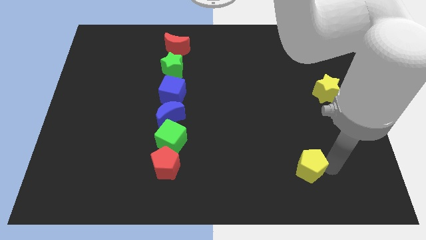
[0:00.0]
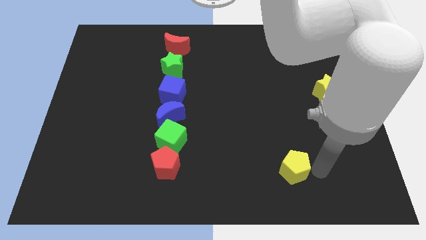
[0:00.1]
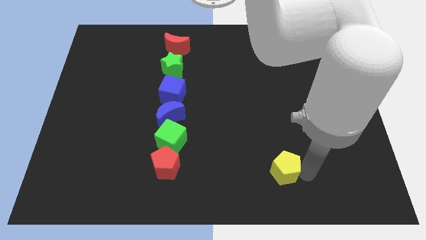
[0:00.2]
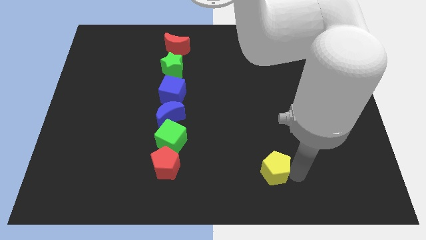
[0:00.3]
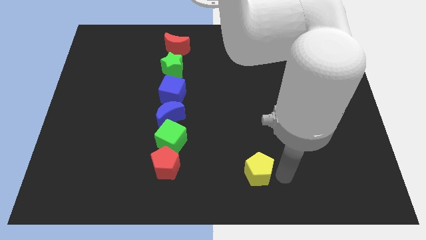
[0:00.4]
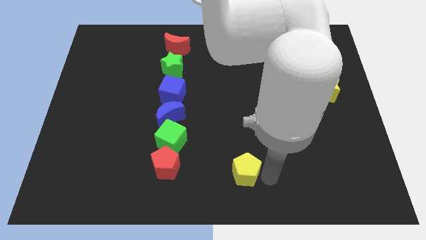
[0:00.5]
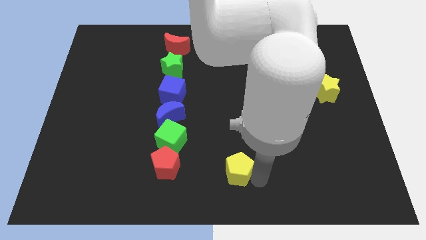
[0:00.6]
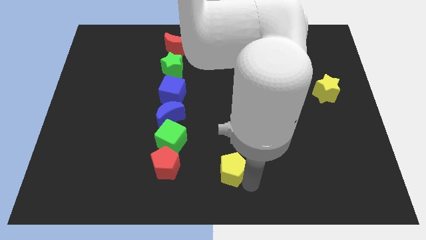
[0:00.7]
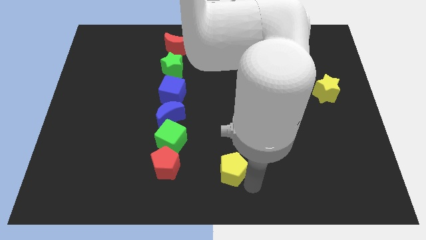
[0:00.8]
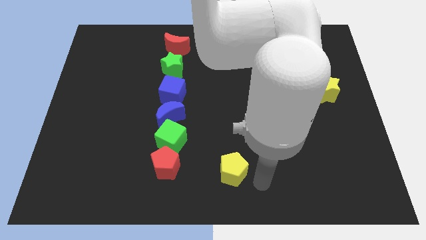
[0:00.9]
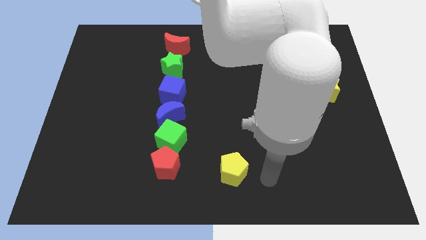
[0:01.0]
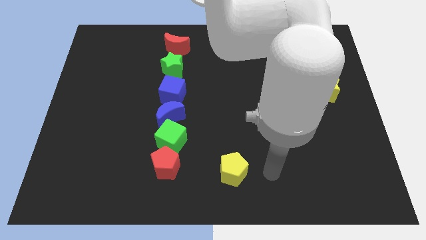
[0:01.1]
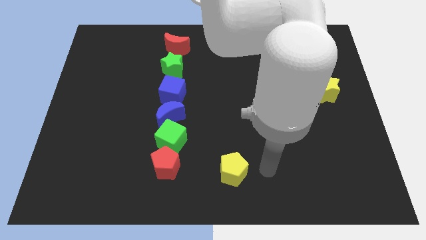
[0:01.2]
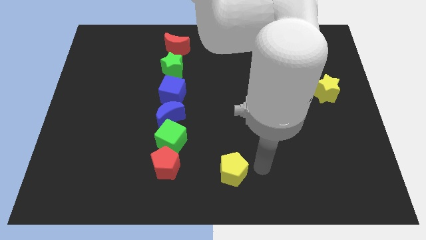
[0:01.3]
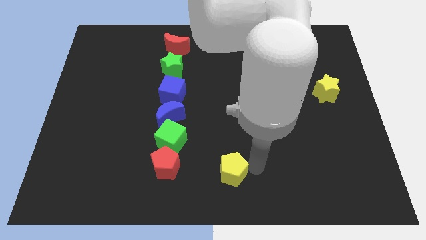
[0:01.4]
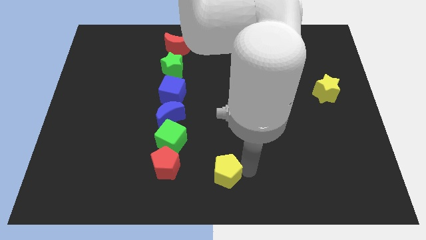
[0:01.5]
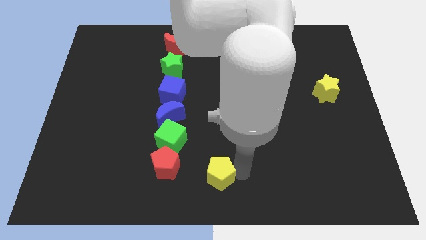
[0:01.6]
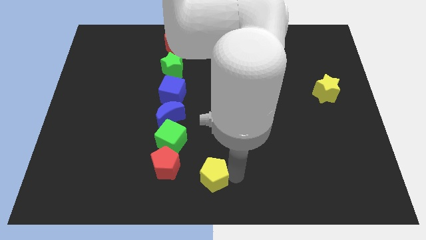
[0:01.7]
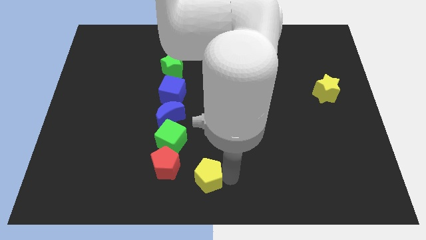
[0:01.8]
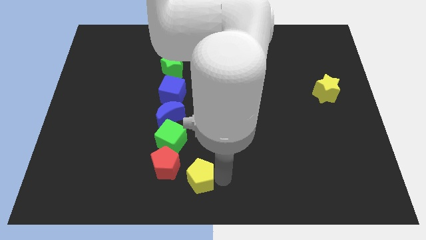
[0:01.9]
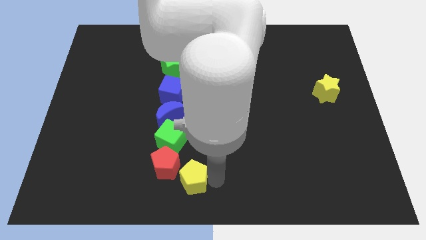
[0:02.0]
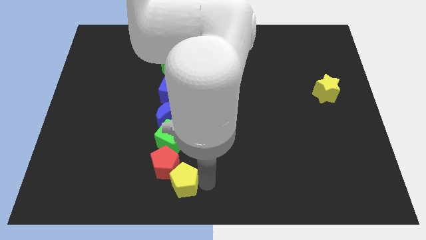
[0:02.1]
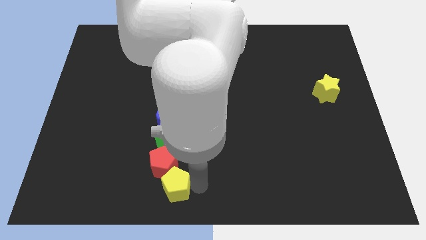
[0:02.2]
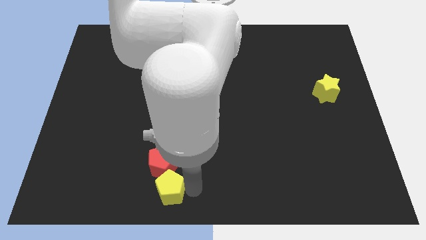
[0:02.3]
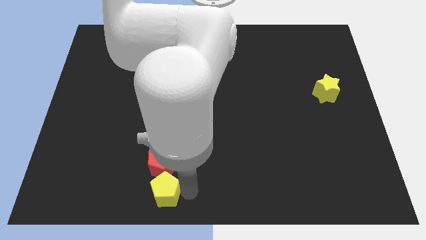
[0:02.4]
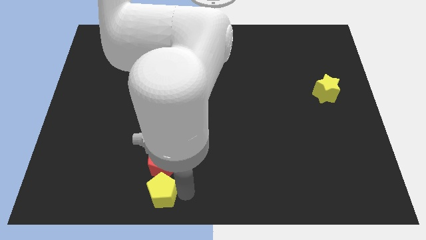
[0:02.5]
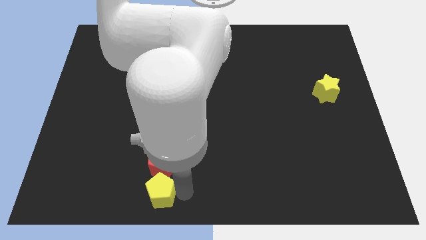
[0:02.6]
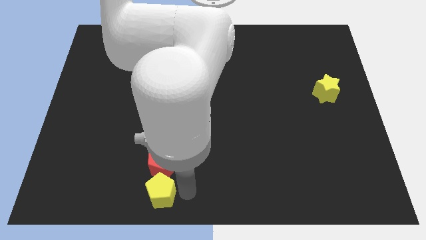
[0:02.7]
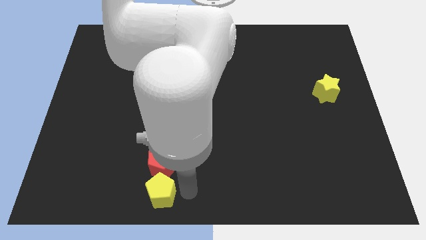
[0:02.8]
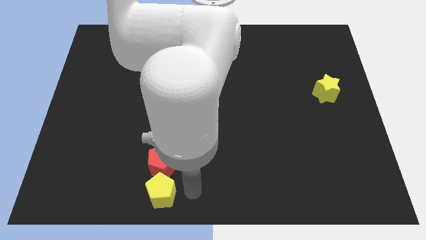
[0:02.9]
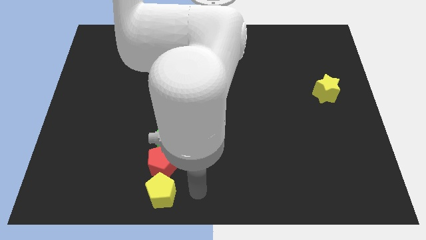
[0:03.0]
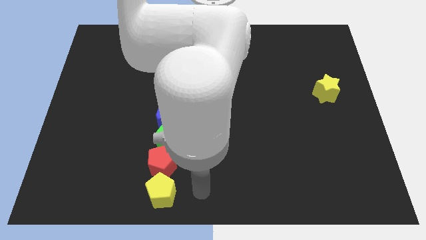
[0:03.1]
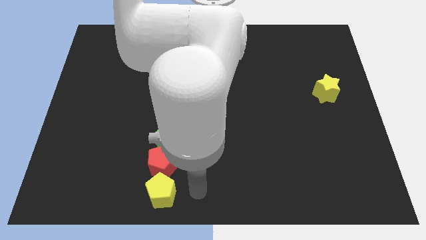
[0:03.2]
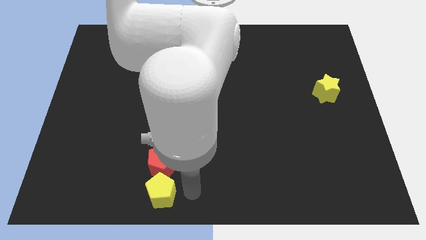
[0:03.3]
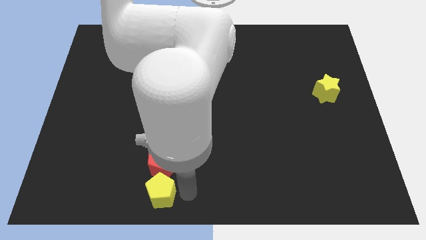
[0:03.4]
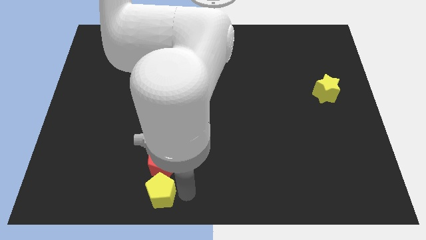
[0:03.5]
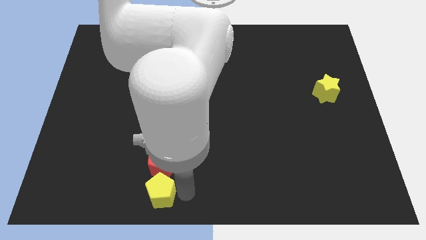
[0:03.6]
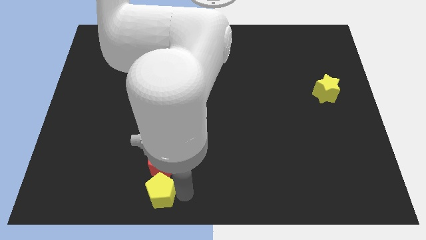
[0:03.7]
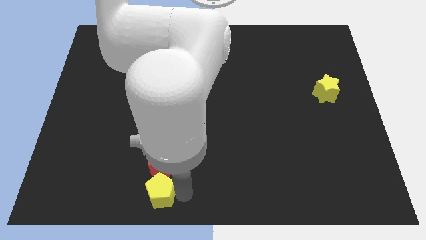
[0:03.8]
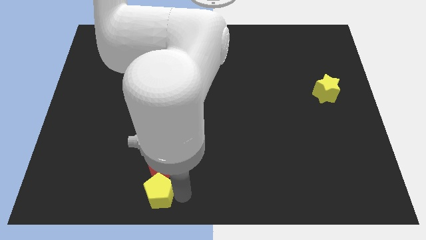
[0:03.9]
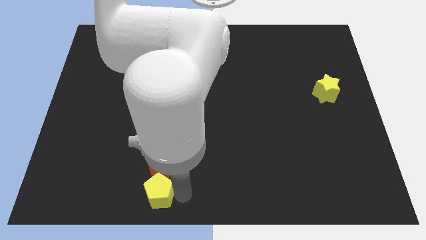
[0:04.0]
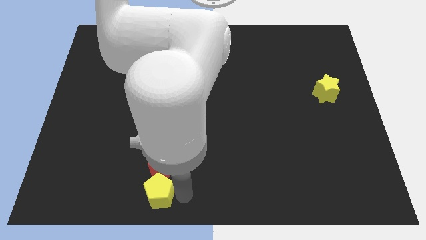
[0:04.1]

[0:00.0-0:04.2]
place the yellow pentagon below the red pentagon

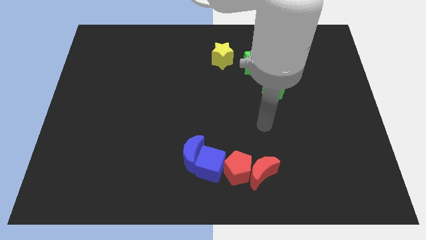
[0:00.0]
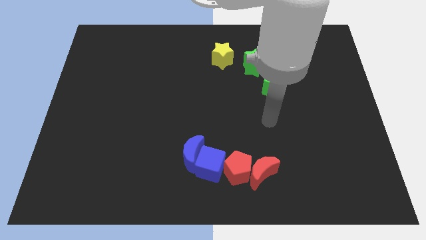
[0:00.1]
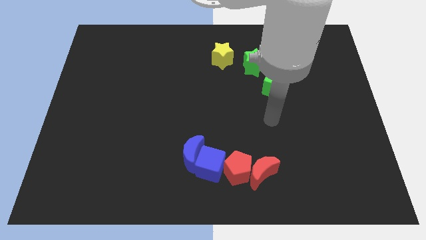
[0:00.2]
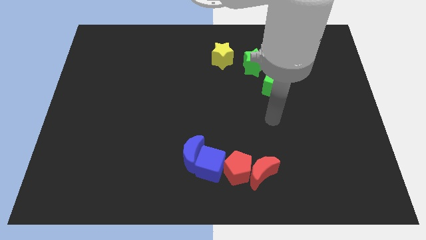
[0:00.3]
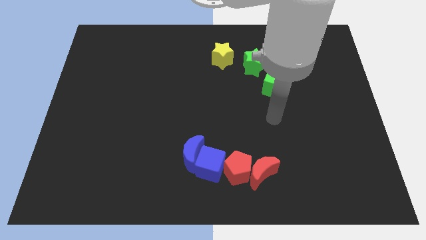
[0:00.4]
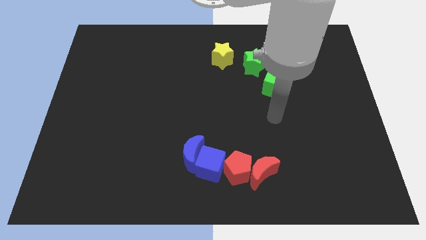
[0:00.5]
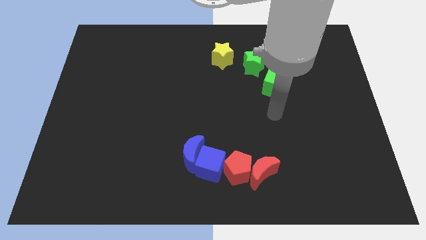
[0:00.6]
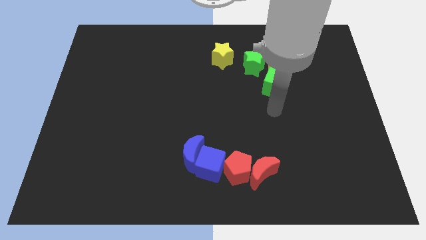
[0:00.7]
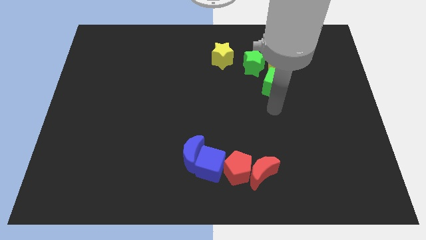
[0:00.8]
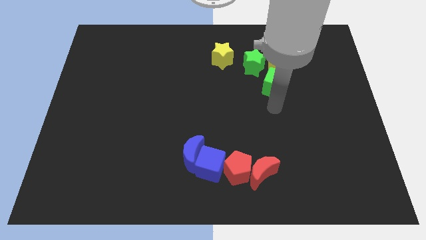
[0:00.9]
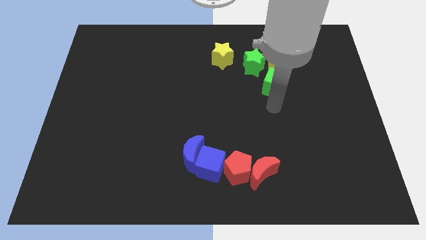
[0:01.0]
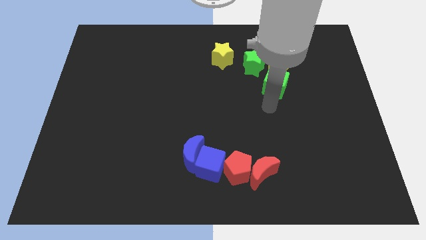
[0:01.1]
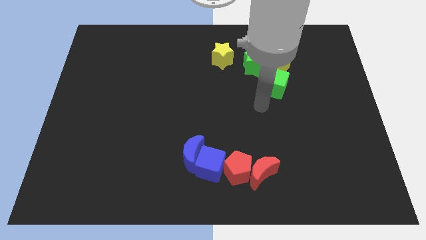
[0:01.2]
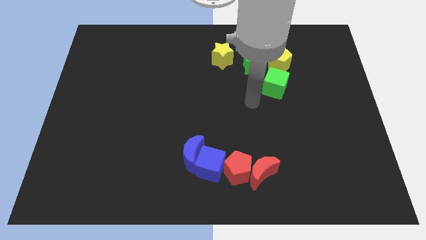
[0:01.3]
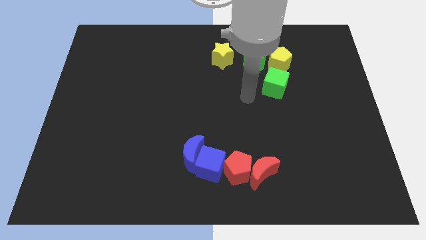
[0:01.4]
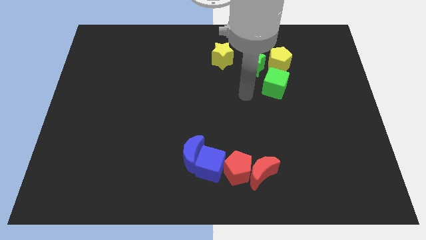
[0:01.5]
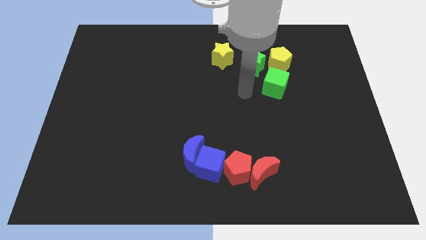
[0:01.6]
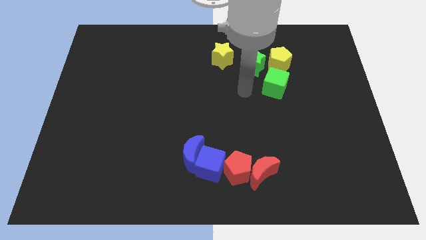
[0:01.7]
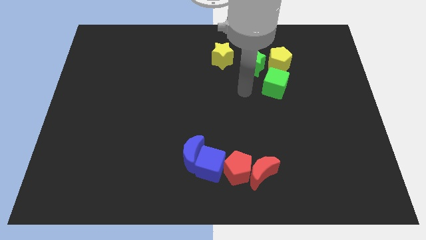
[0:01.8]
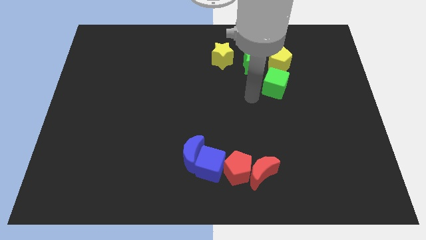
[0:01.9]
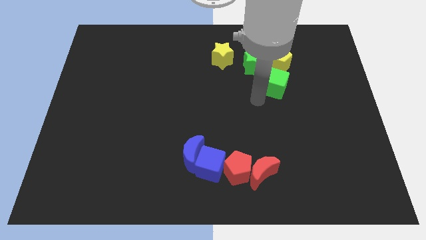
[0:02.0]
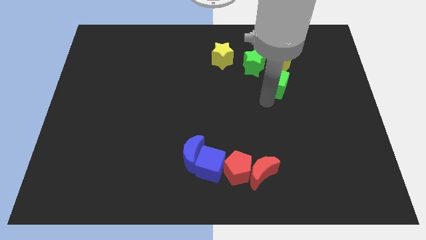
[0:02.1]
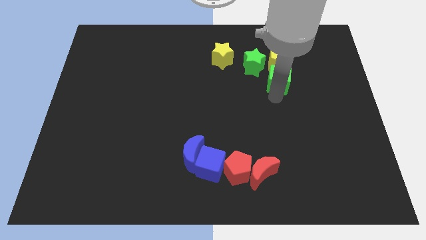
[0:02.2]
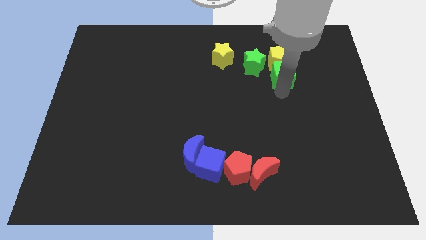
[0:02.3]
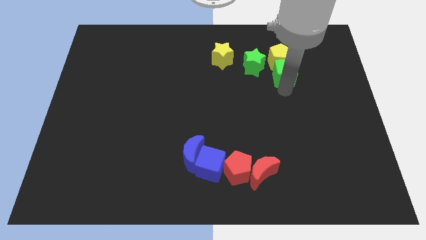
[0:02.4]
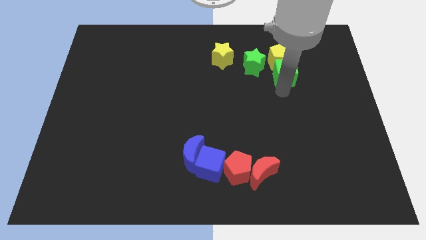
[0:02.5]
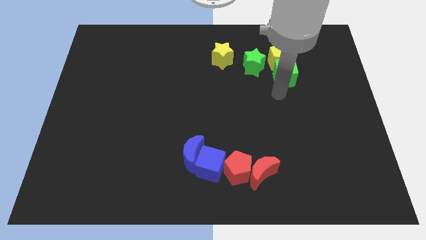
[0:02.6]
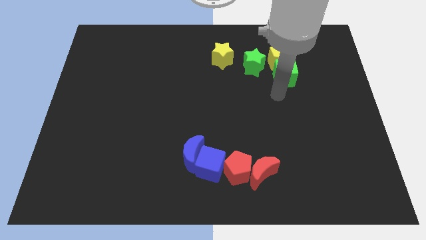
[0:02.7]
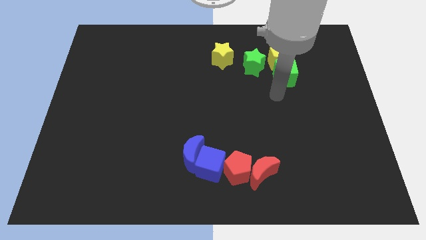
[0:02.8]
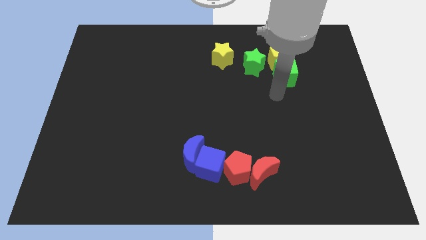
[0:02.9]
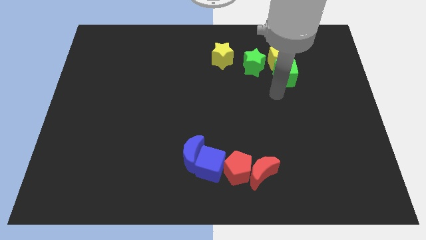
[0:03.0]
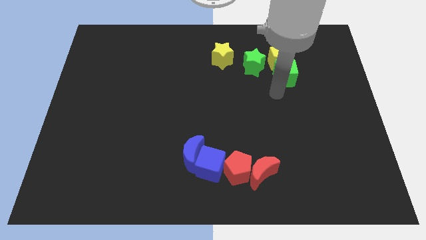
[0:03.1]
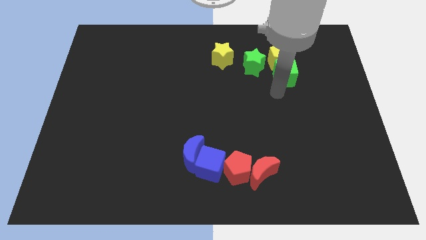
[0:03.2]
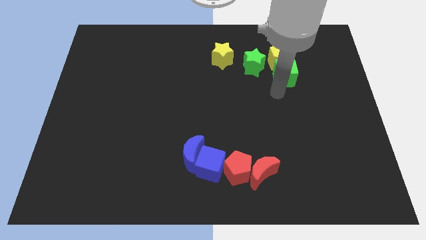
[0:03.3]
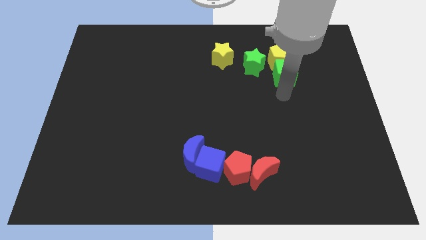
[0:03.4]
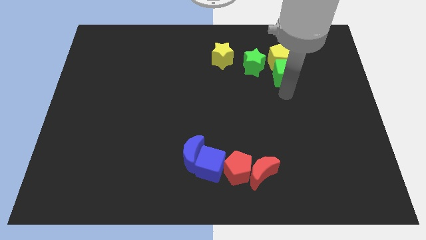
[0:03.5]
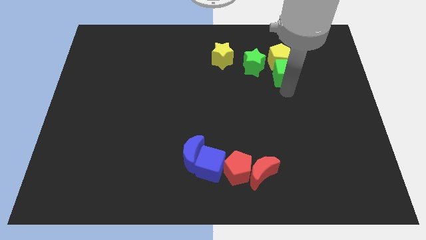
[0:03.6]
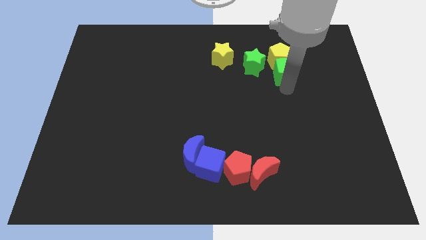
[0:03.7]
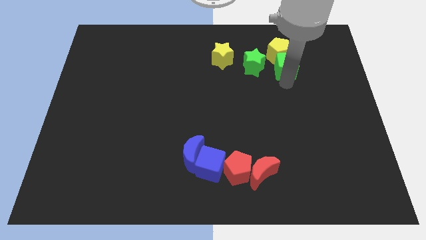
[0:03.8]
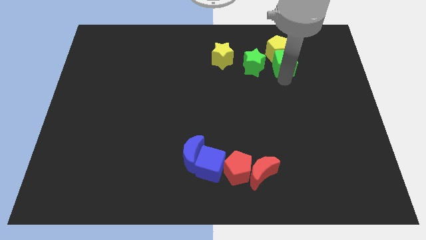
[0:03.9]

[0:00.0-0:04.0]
push green cube into yellow pentagon

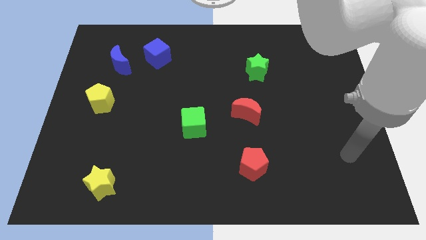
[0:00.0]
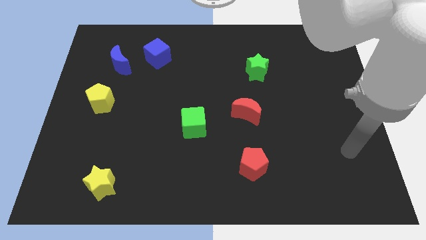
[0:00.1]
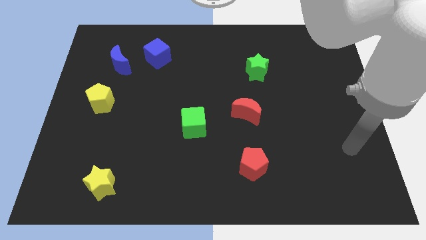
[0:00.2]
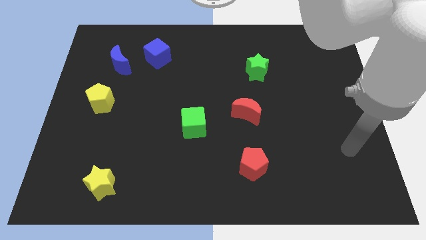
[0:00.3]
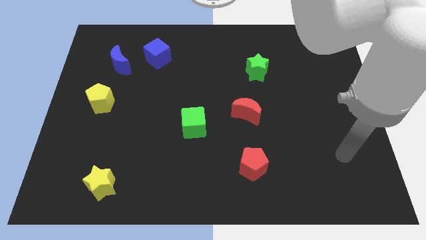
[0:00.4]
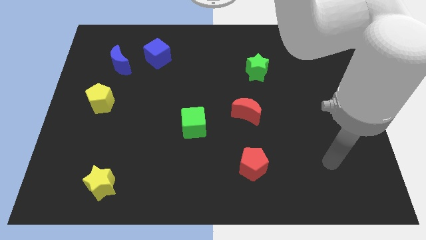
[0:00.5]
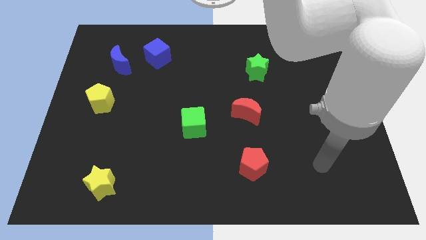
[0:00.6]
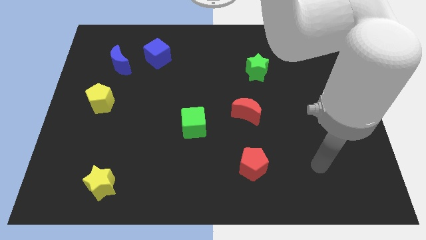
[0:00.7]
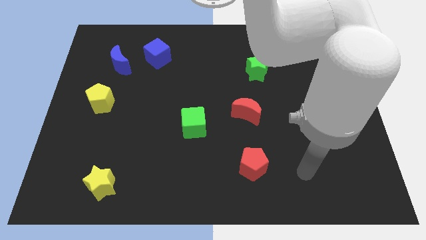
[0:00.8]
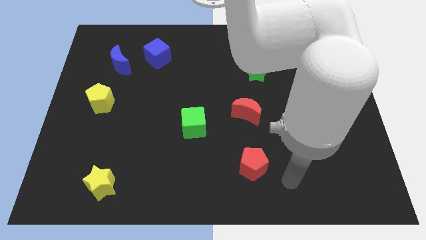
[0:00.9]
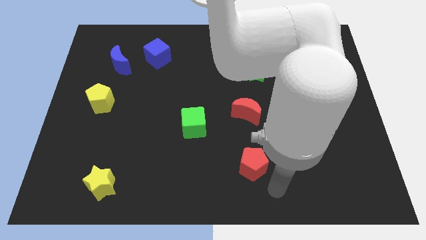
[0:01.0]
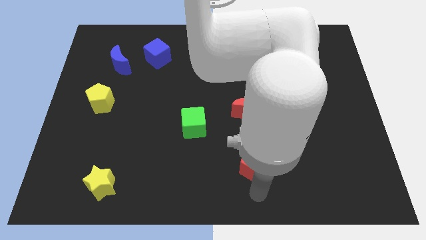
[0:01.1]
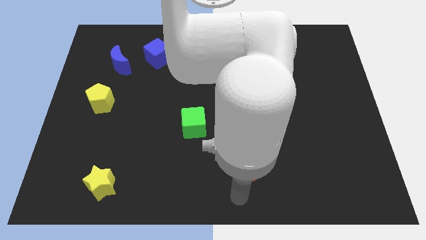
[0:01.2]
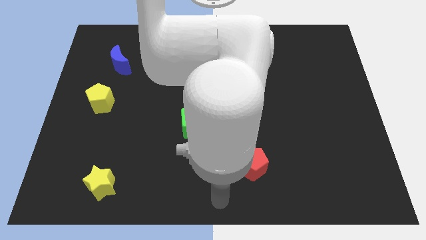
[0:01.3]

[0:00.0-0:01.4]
place your hand under the red pentagon
